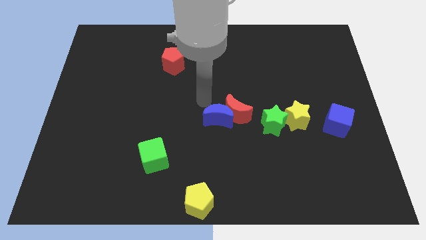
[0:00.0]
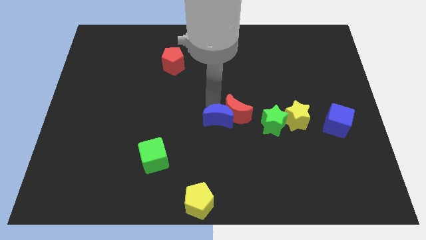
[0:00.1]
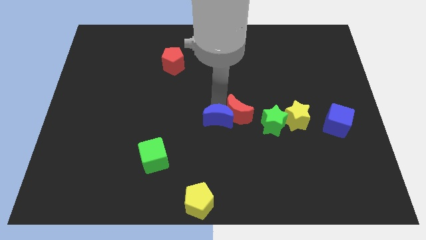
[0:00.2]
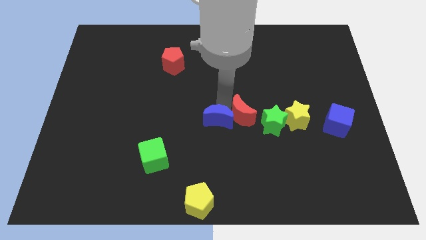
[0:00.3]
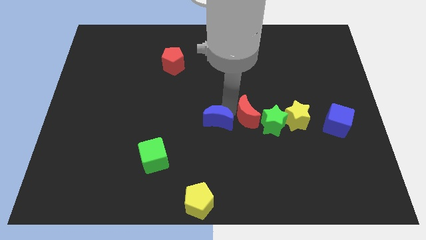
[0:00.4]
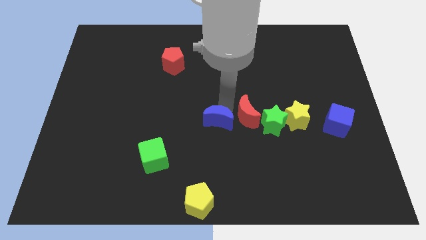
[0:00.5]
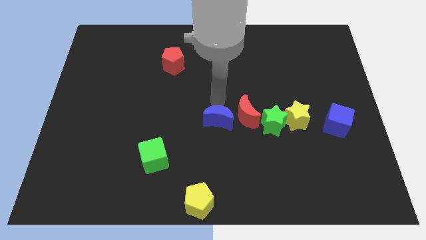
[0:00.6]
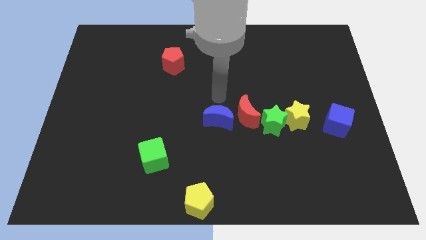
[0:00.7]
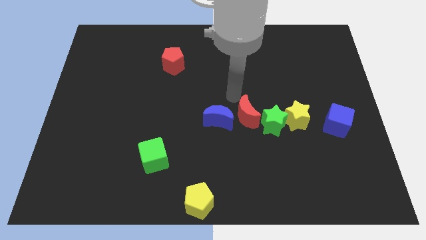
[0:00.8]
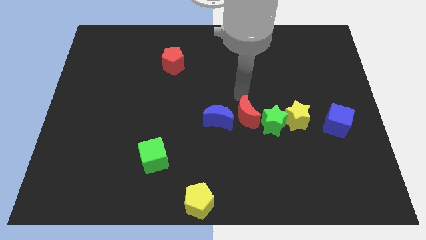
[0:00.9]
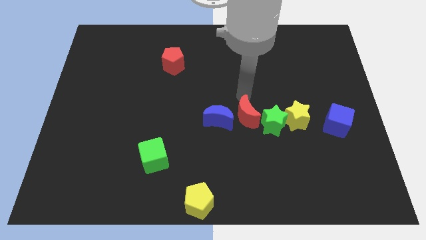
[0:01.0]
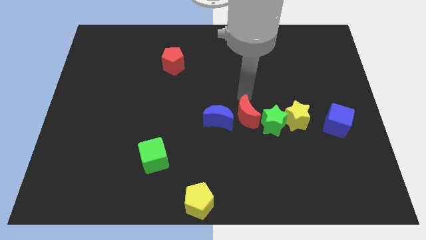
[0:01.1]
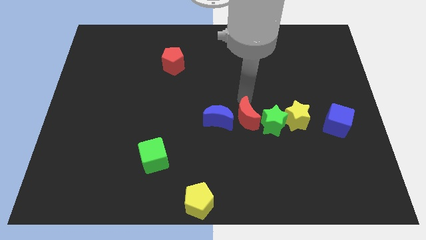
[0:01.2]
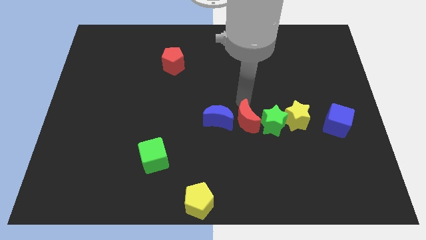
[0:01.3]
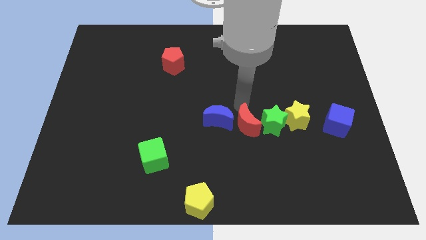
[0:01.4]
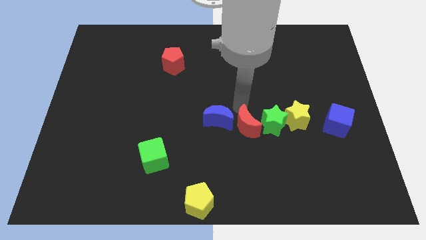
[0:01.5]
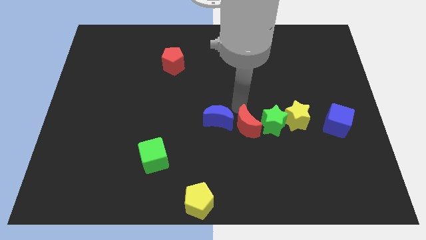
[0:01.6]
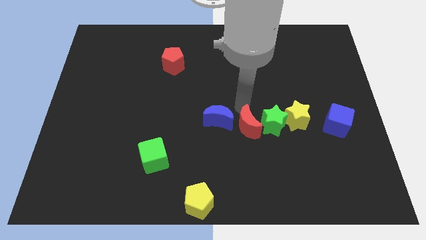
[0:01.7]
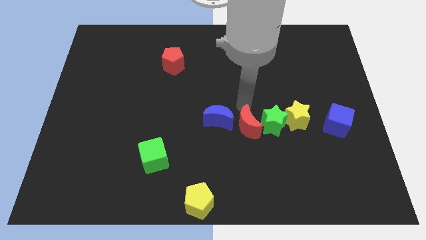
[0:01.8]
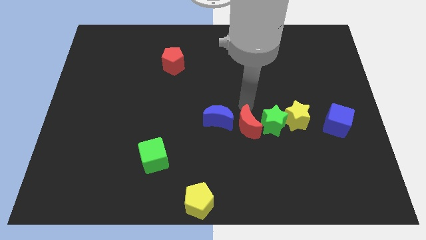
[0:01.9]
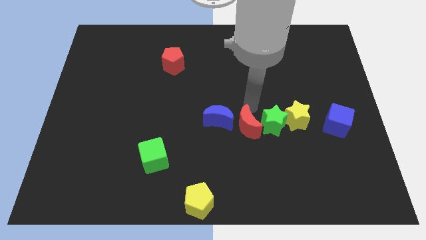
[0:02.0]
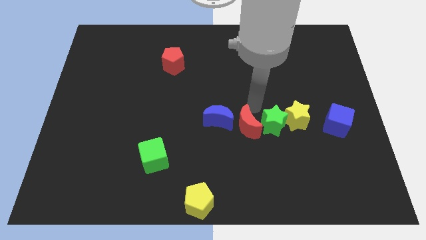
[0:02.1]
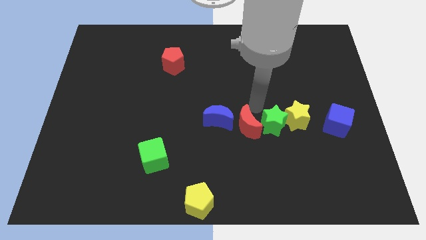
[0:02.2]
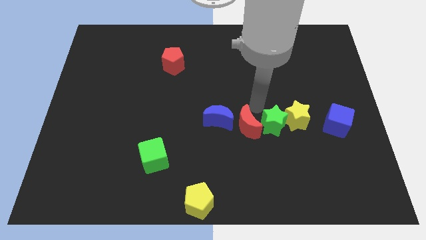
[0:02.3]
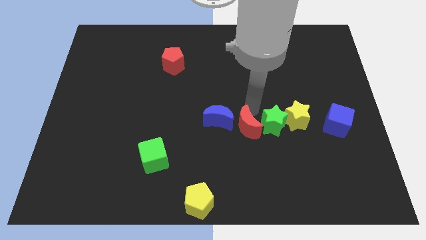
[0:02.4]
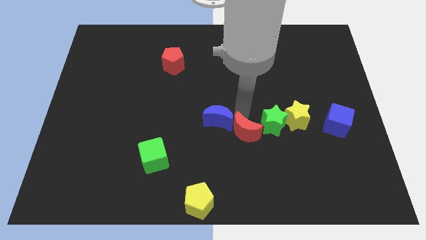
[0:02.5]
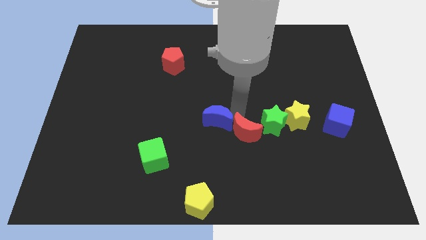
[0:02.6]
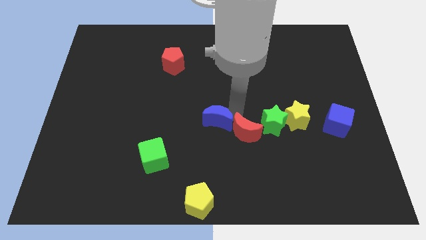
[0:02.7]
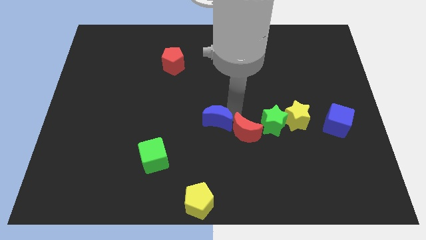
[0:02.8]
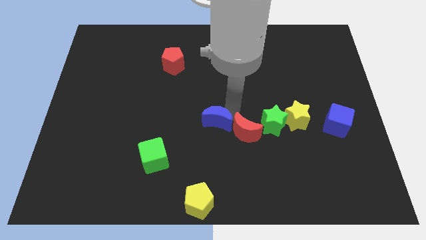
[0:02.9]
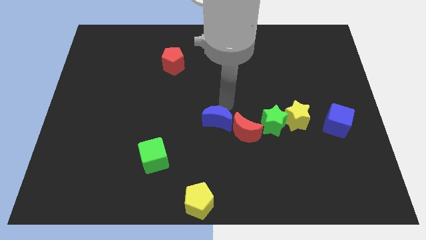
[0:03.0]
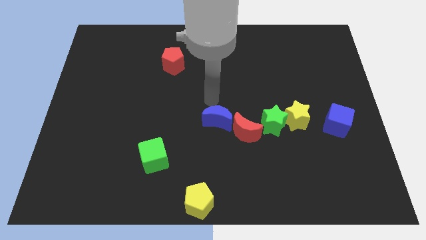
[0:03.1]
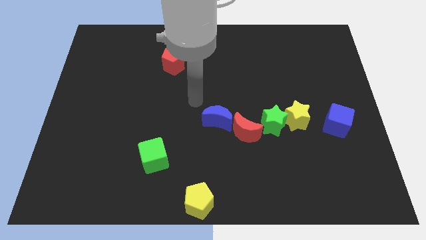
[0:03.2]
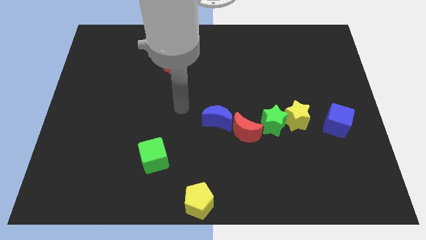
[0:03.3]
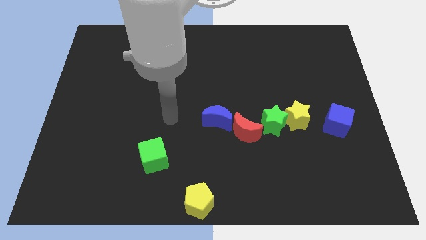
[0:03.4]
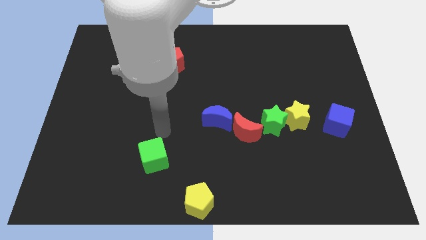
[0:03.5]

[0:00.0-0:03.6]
push the red moon slightly downward

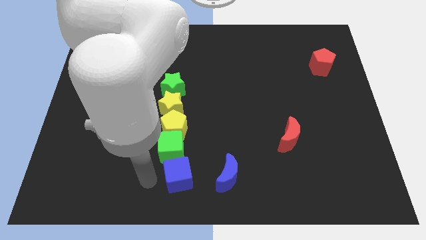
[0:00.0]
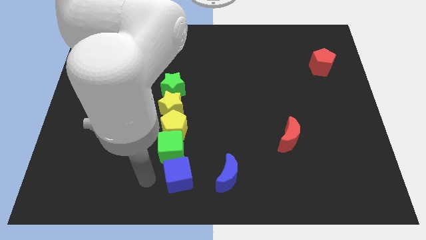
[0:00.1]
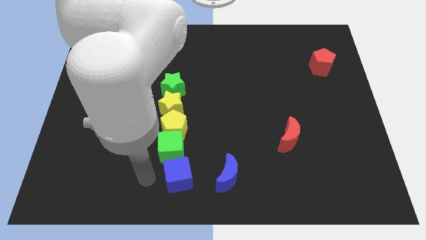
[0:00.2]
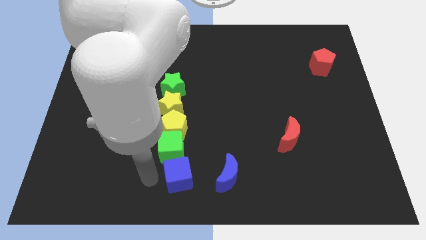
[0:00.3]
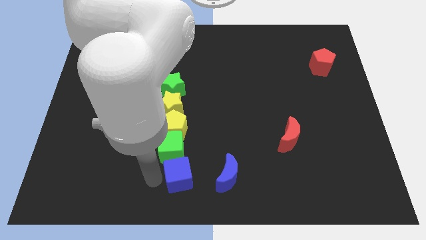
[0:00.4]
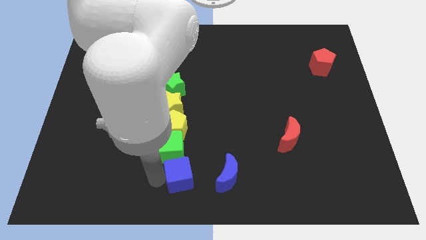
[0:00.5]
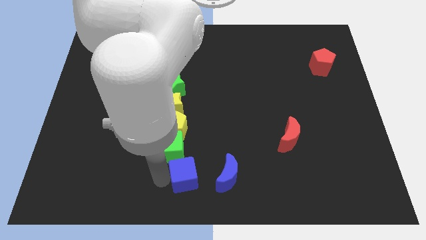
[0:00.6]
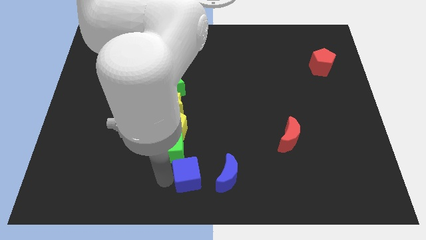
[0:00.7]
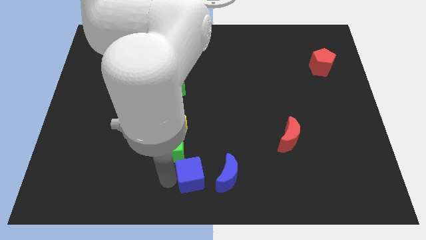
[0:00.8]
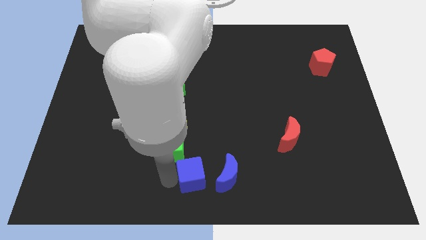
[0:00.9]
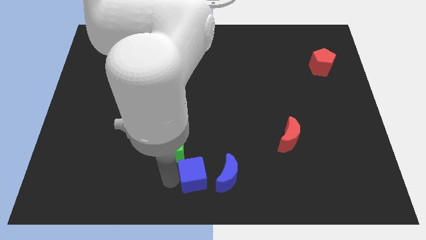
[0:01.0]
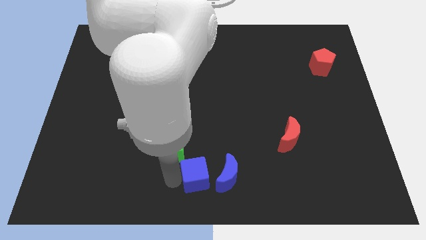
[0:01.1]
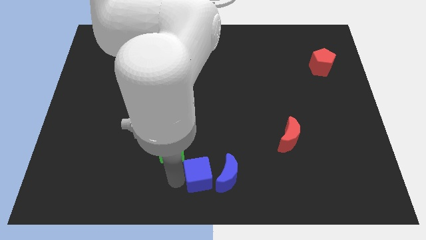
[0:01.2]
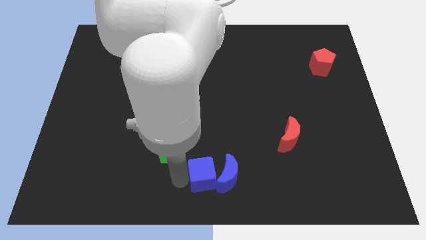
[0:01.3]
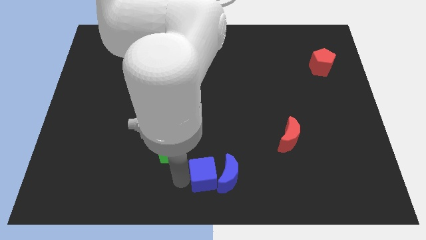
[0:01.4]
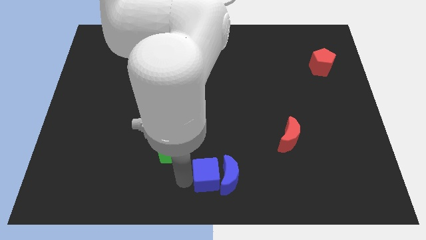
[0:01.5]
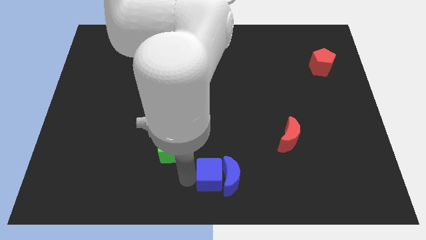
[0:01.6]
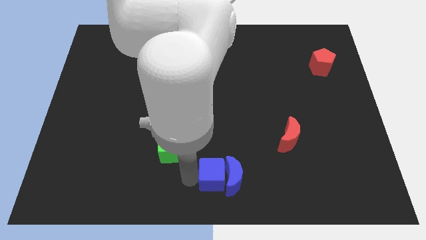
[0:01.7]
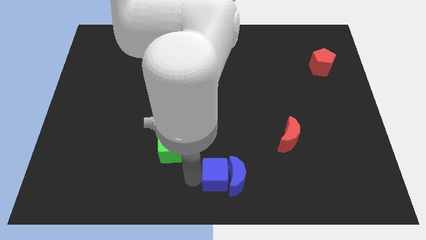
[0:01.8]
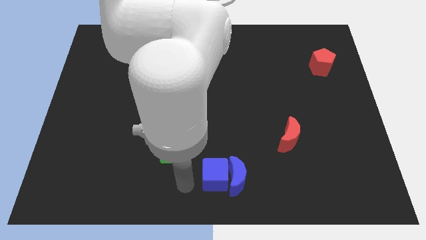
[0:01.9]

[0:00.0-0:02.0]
push the blue cube into the blue crescent

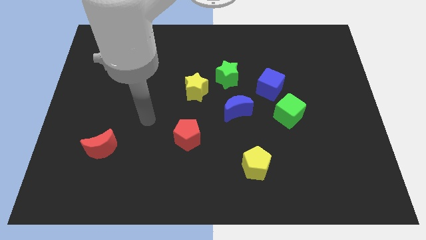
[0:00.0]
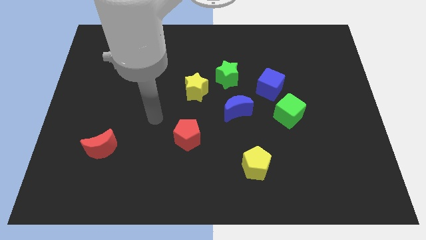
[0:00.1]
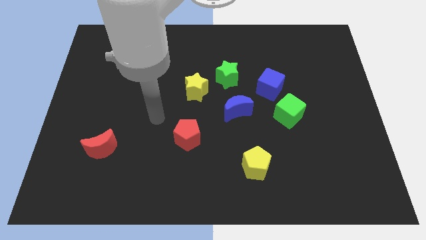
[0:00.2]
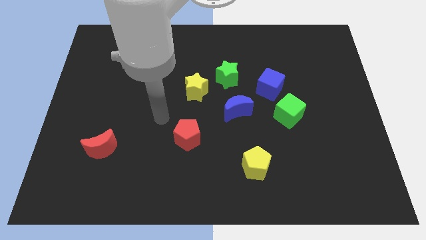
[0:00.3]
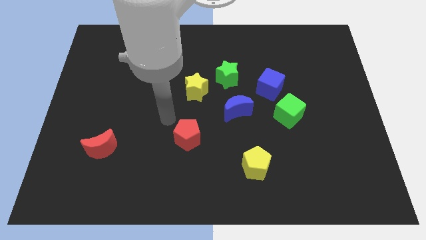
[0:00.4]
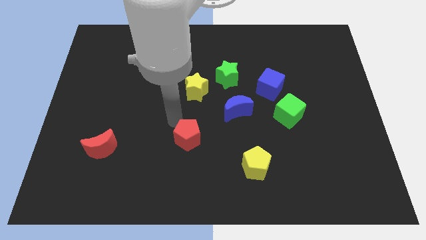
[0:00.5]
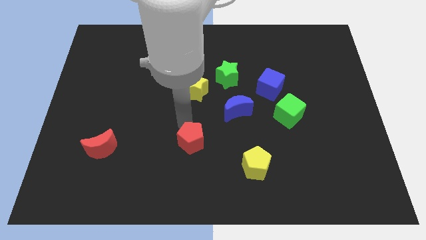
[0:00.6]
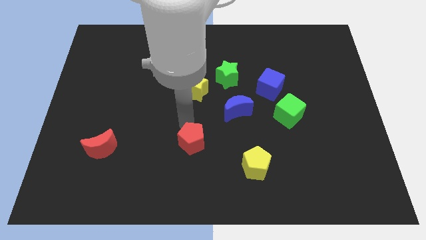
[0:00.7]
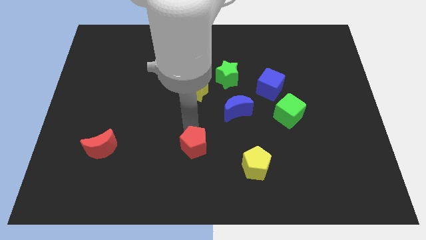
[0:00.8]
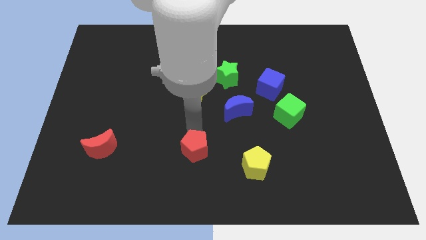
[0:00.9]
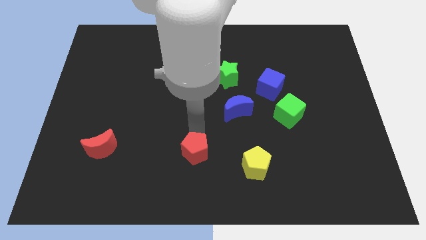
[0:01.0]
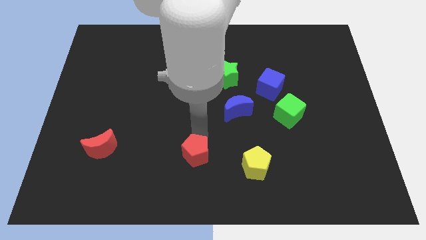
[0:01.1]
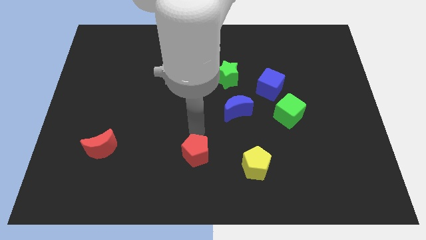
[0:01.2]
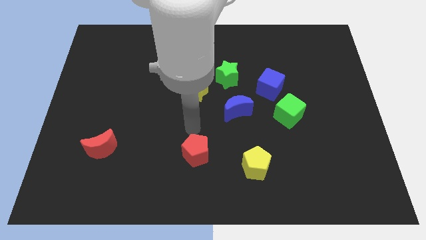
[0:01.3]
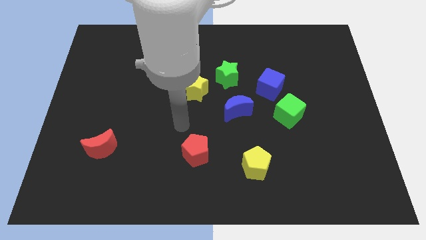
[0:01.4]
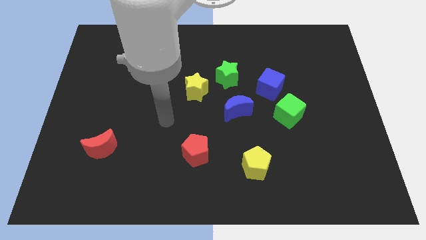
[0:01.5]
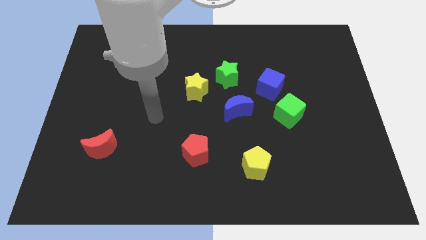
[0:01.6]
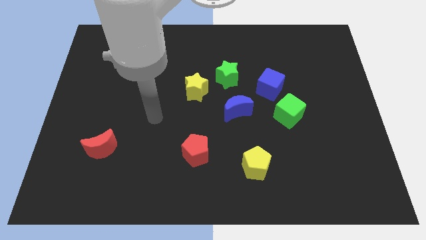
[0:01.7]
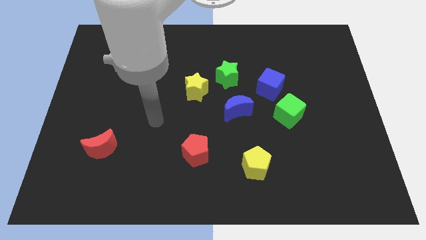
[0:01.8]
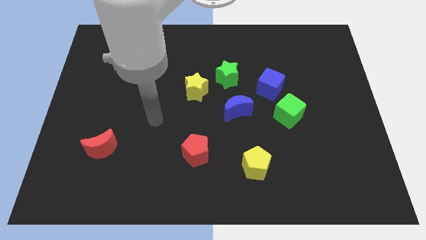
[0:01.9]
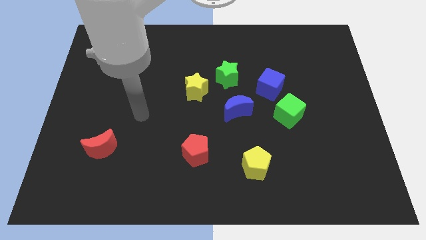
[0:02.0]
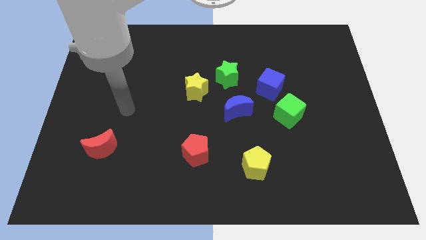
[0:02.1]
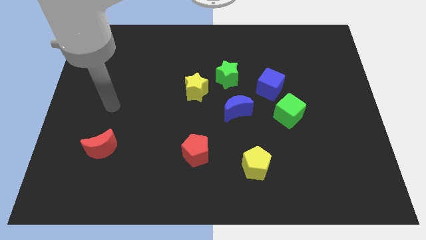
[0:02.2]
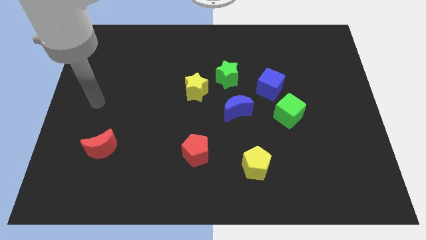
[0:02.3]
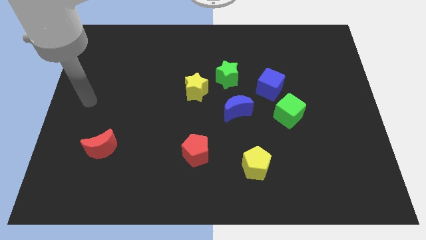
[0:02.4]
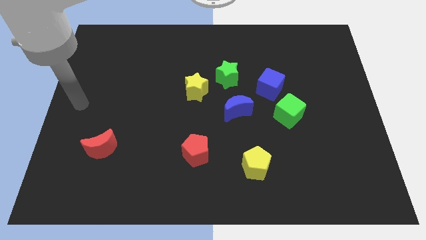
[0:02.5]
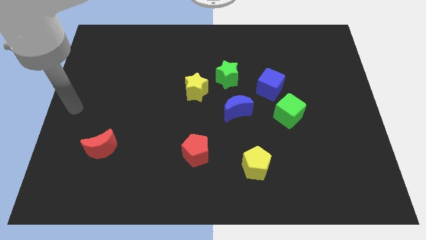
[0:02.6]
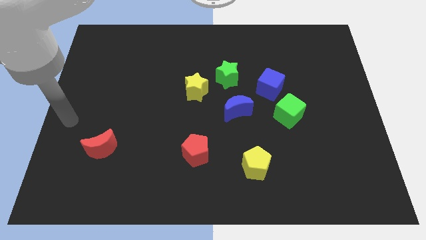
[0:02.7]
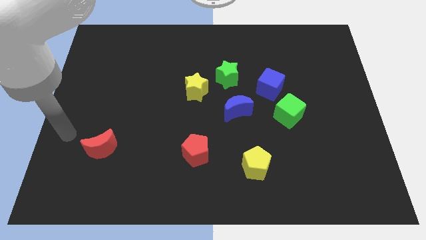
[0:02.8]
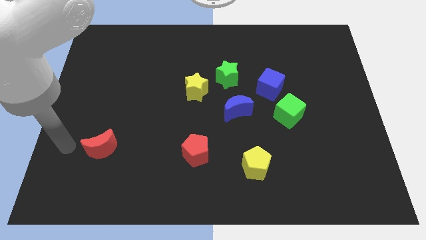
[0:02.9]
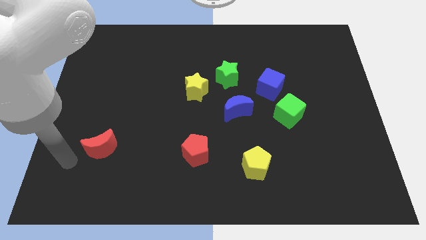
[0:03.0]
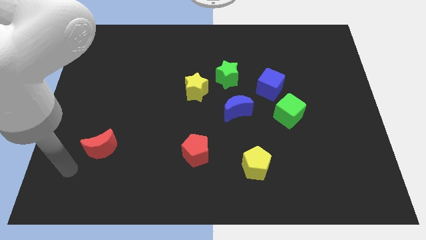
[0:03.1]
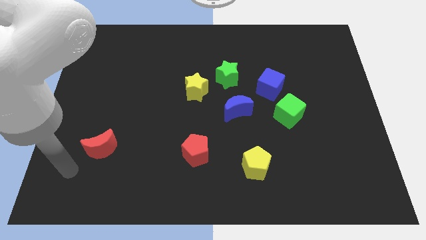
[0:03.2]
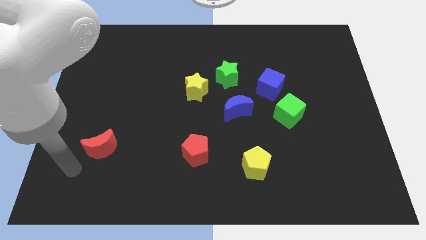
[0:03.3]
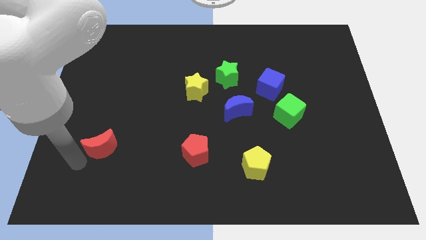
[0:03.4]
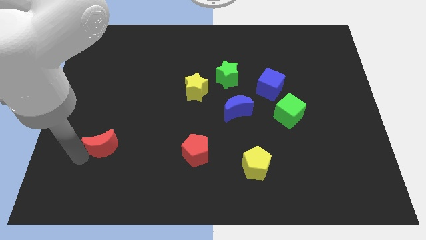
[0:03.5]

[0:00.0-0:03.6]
place the arm diagonal to the red moon
